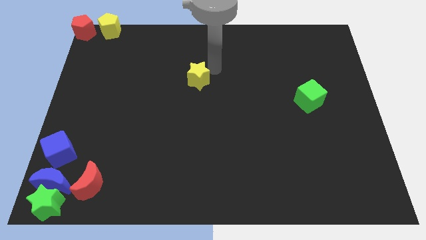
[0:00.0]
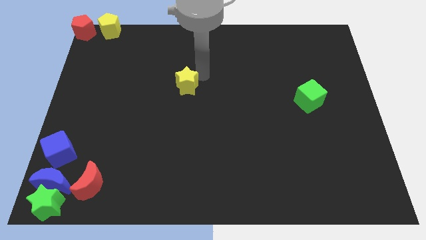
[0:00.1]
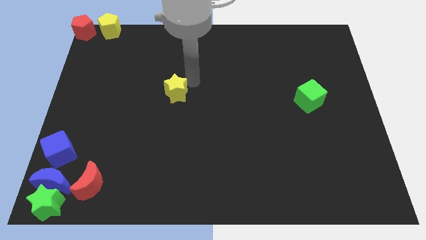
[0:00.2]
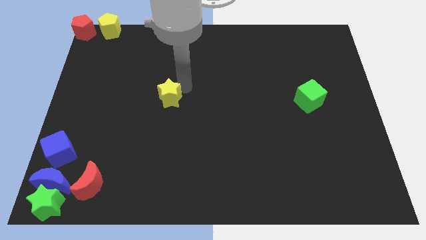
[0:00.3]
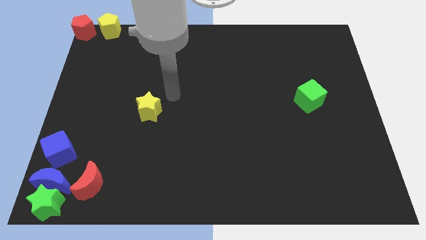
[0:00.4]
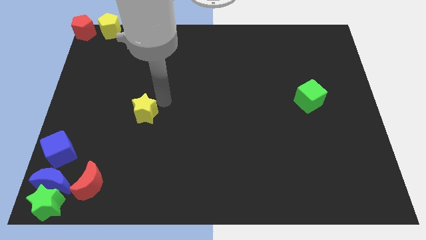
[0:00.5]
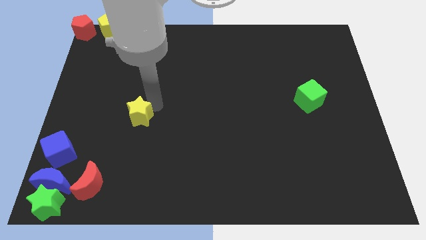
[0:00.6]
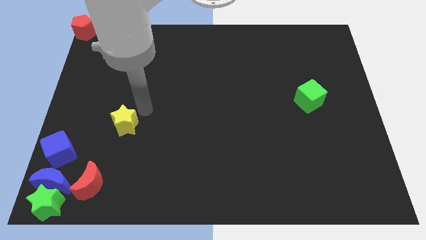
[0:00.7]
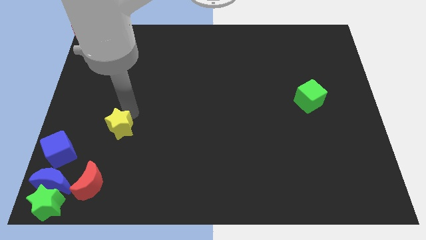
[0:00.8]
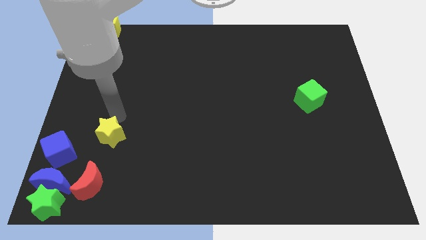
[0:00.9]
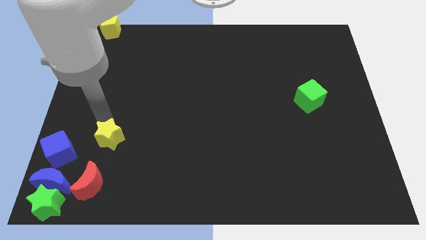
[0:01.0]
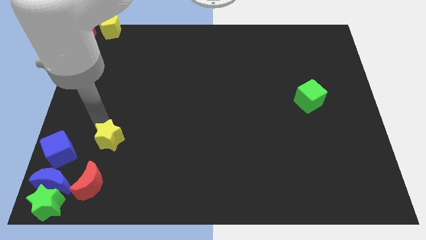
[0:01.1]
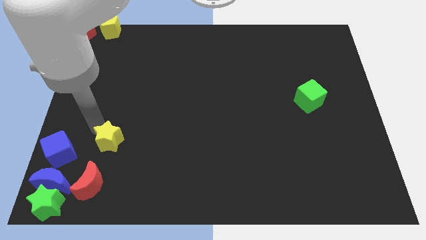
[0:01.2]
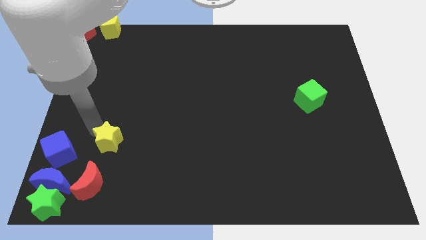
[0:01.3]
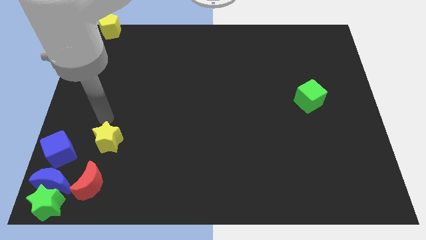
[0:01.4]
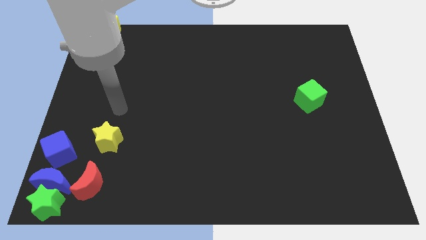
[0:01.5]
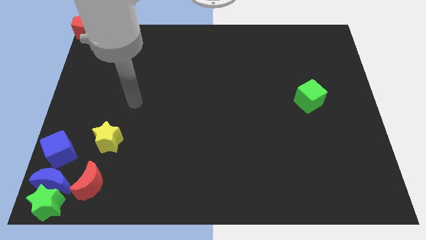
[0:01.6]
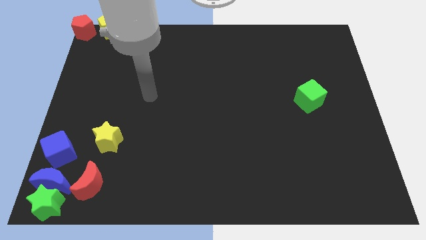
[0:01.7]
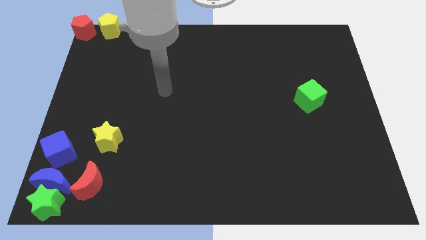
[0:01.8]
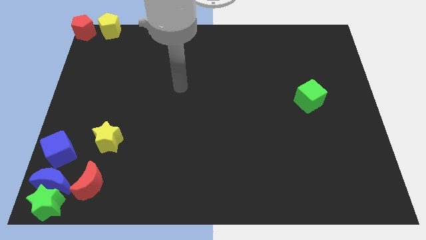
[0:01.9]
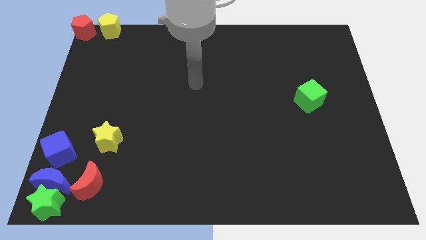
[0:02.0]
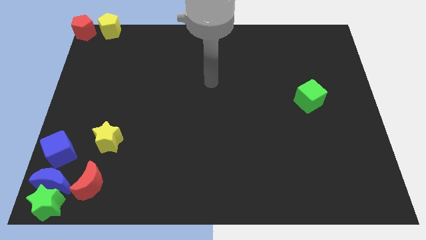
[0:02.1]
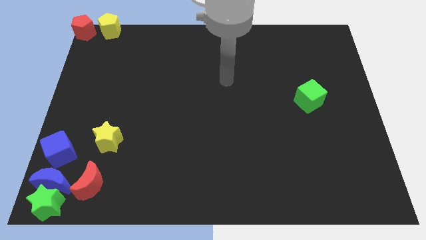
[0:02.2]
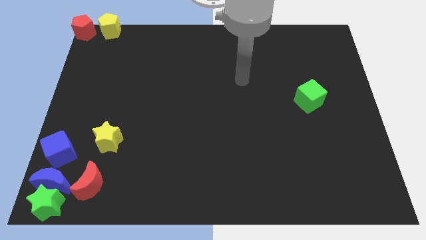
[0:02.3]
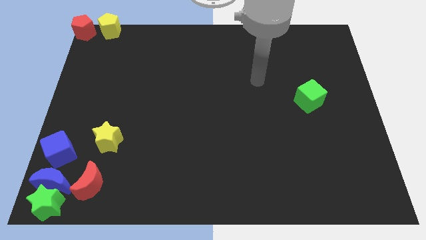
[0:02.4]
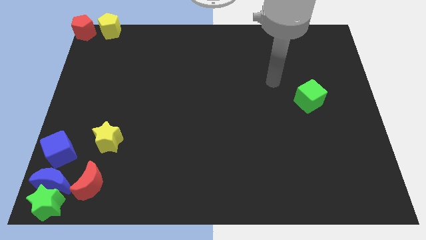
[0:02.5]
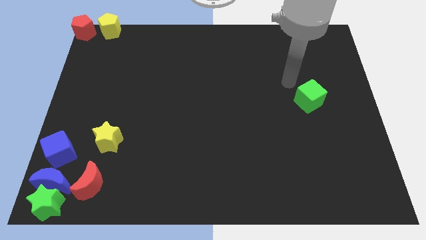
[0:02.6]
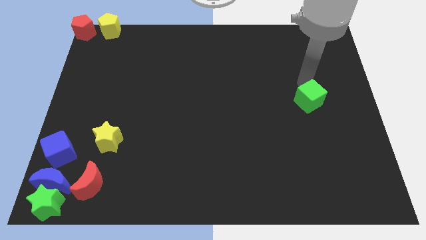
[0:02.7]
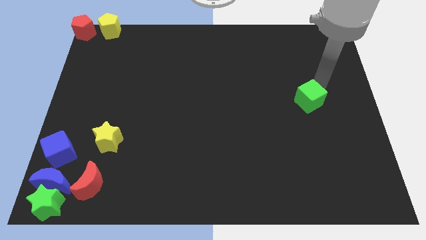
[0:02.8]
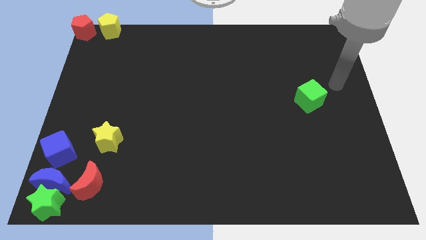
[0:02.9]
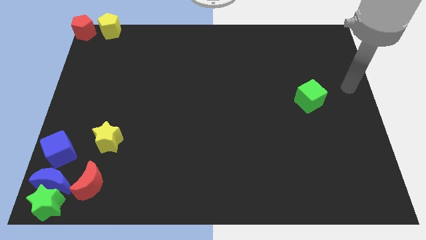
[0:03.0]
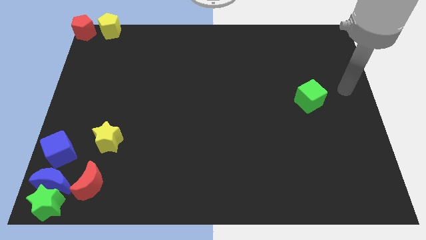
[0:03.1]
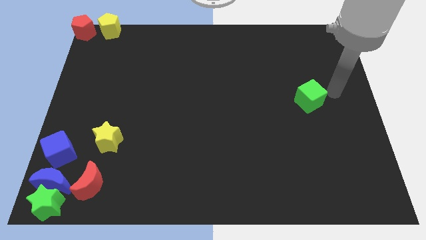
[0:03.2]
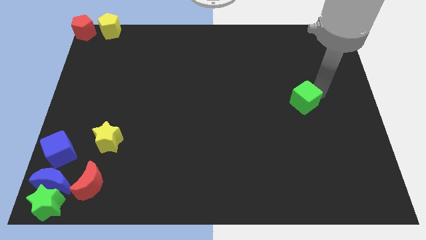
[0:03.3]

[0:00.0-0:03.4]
move the yellow star towards the bottom left

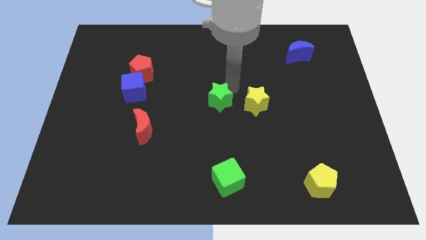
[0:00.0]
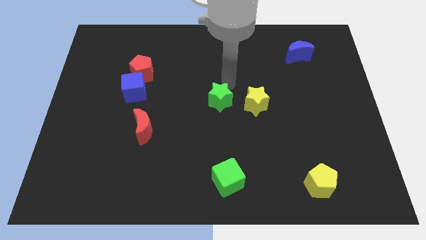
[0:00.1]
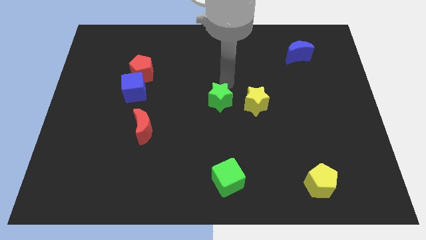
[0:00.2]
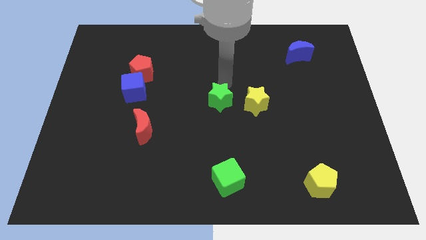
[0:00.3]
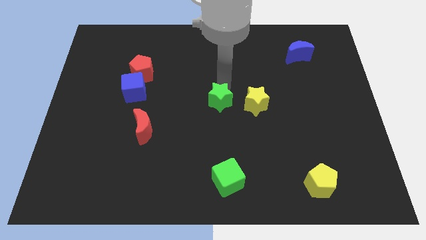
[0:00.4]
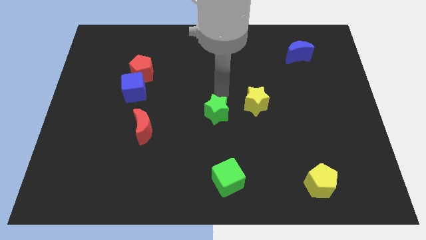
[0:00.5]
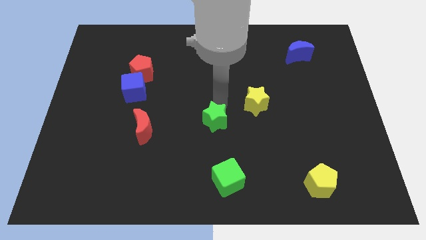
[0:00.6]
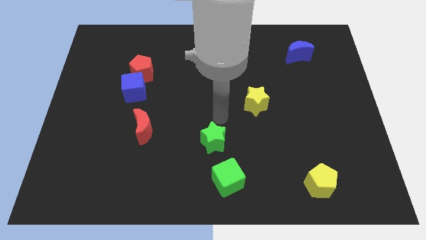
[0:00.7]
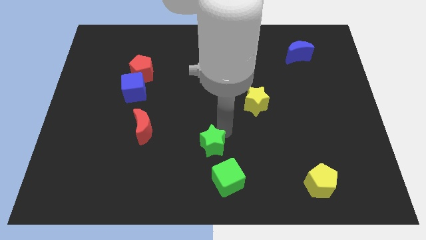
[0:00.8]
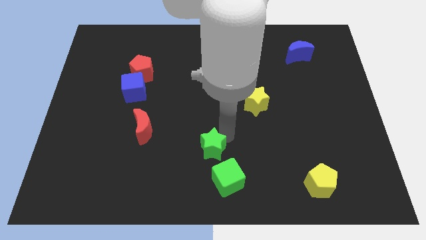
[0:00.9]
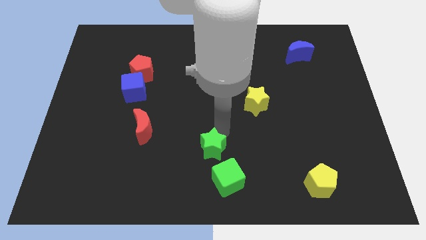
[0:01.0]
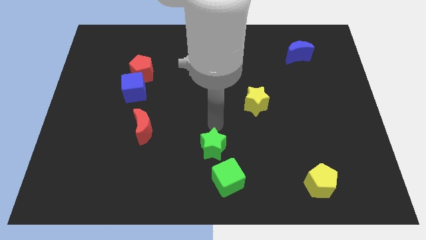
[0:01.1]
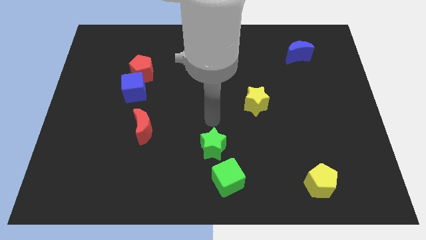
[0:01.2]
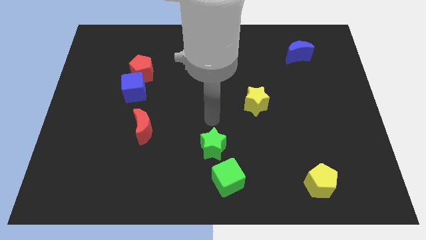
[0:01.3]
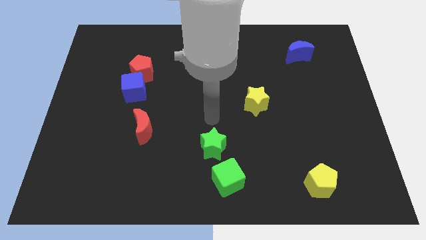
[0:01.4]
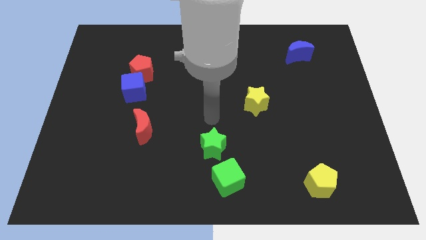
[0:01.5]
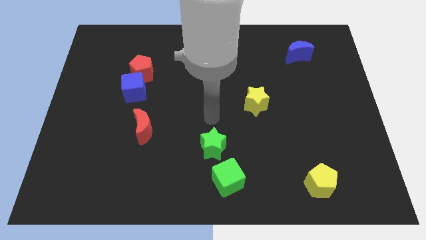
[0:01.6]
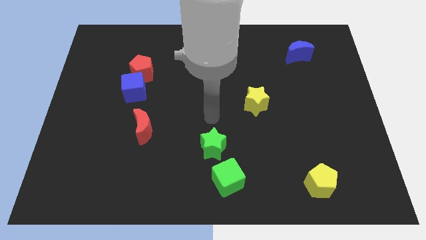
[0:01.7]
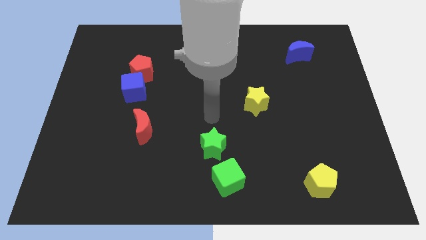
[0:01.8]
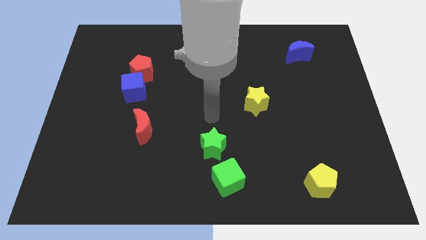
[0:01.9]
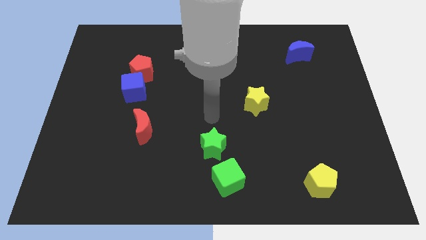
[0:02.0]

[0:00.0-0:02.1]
move the green star to the top of the green cube

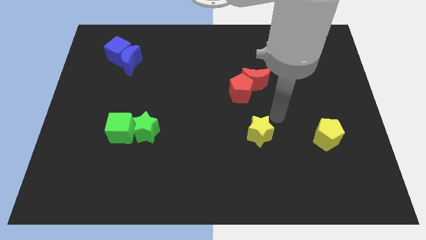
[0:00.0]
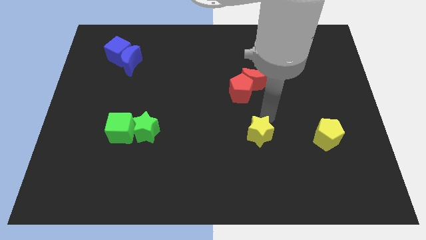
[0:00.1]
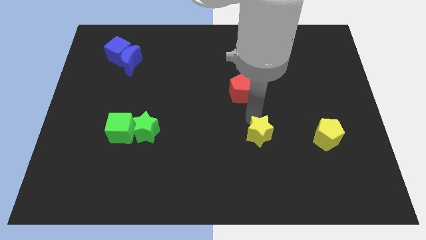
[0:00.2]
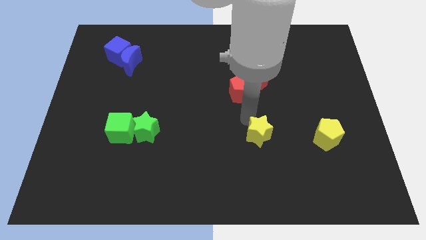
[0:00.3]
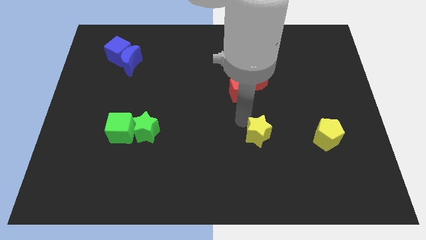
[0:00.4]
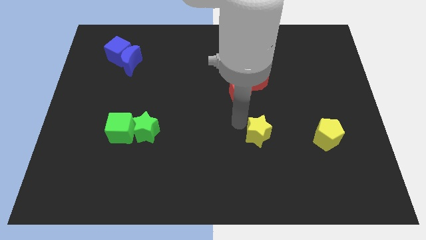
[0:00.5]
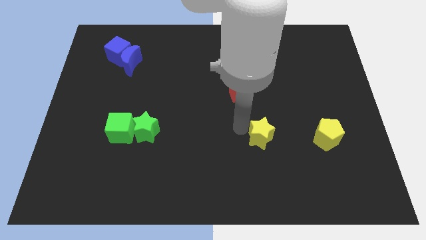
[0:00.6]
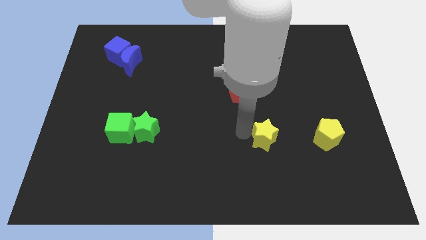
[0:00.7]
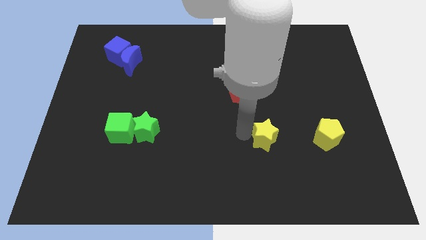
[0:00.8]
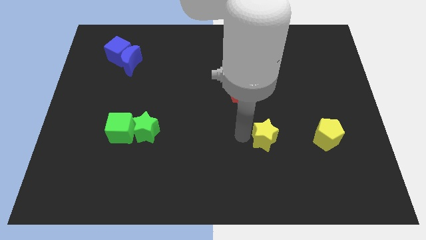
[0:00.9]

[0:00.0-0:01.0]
push yellow star below red crescent

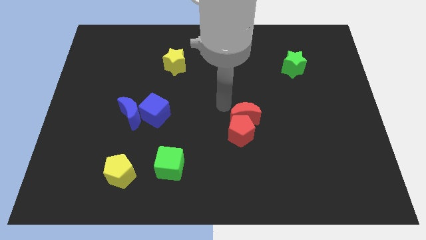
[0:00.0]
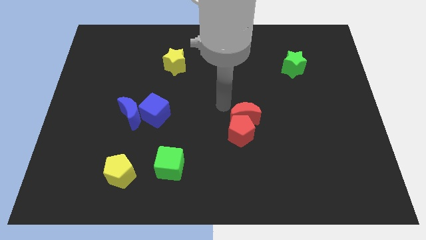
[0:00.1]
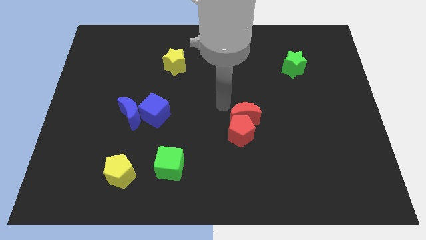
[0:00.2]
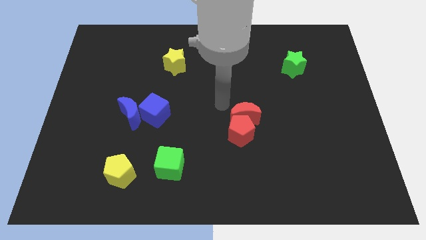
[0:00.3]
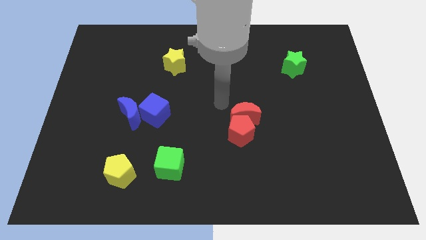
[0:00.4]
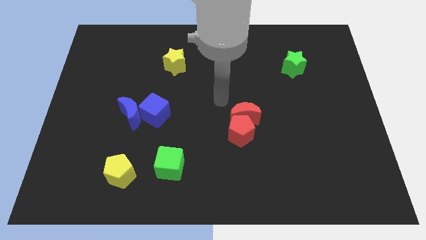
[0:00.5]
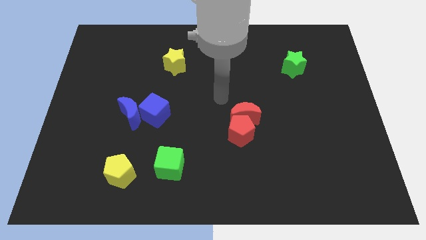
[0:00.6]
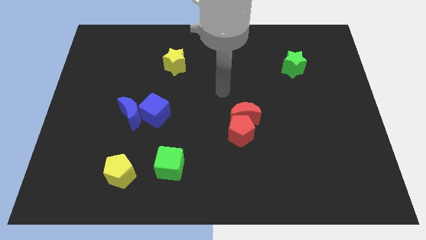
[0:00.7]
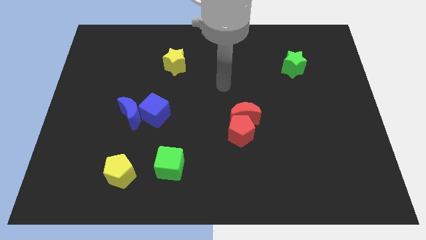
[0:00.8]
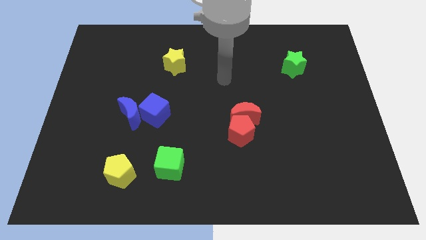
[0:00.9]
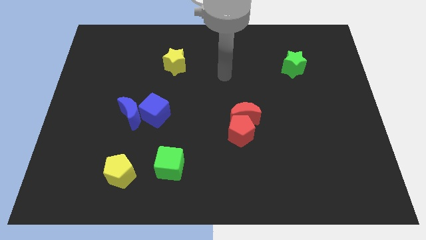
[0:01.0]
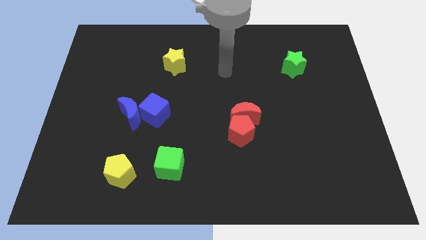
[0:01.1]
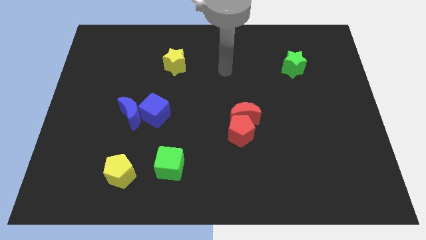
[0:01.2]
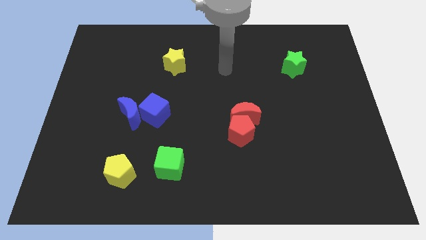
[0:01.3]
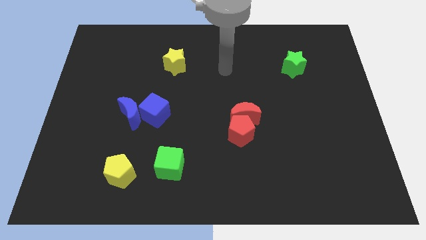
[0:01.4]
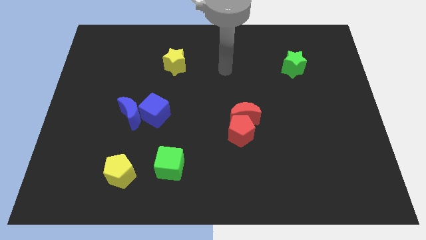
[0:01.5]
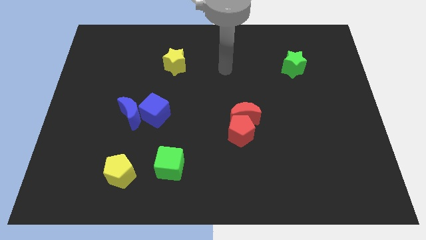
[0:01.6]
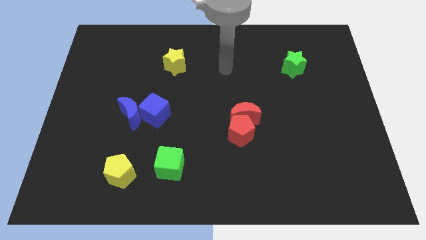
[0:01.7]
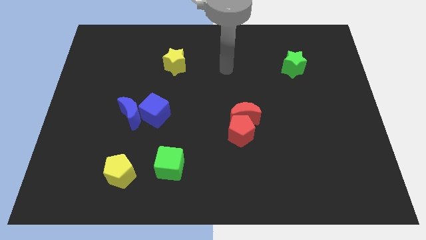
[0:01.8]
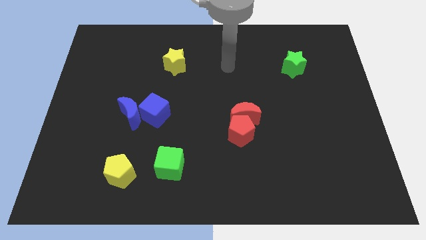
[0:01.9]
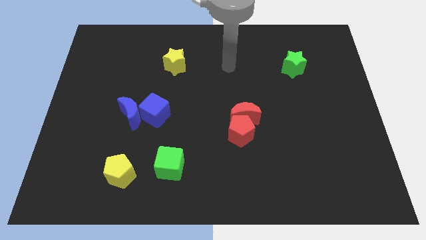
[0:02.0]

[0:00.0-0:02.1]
point the arm to the right of the yellow star

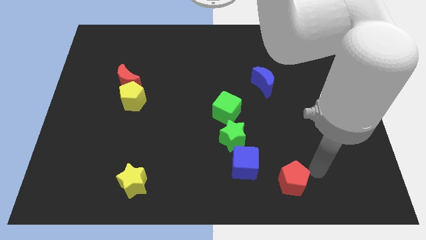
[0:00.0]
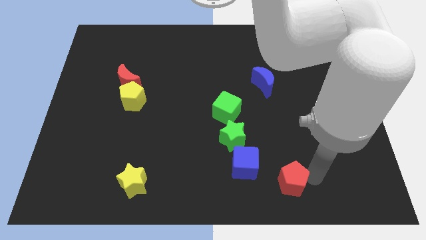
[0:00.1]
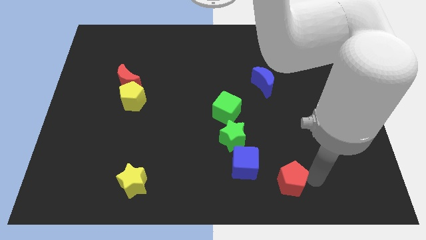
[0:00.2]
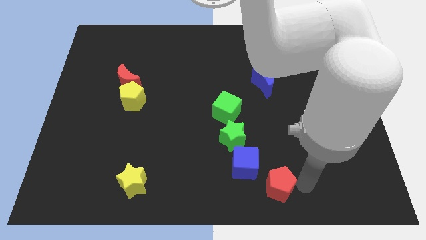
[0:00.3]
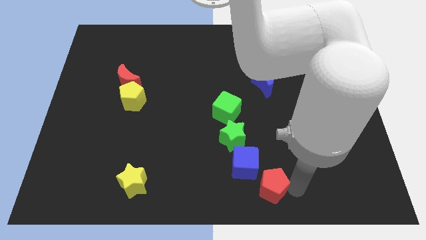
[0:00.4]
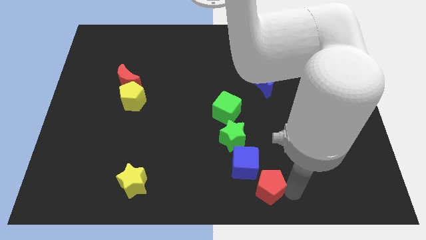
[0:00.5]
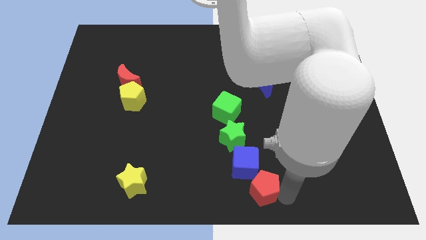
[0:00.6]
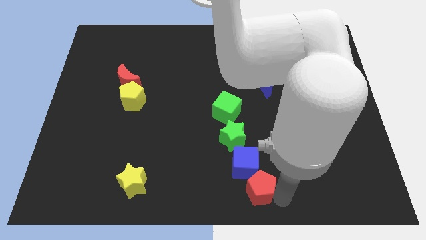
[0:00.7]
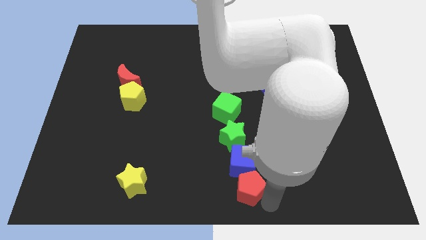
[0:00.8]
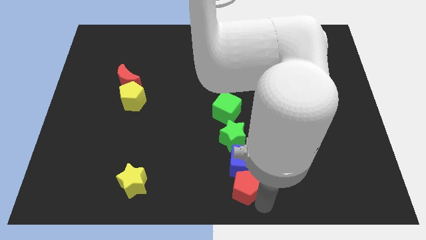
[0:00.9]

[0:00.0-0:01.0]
push the red pentagon into the blue cube
